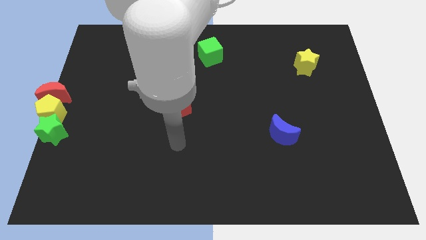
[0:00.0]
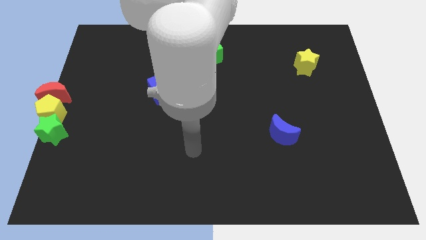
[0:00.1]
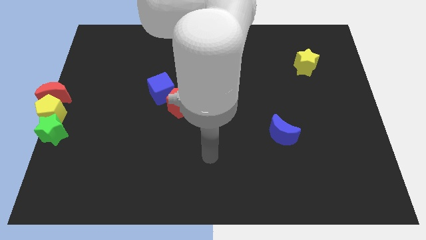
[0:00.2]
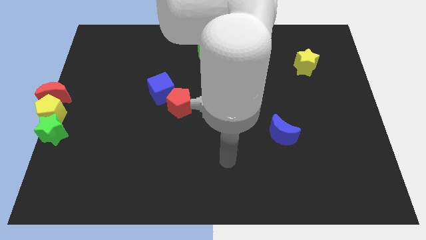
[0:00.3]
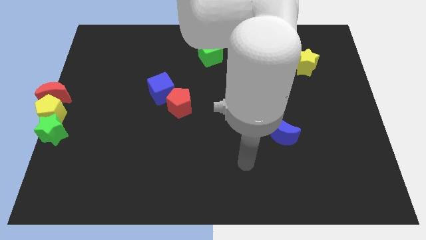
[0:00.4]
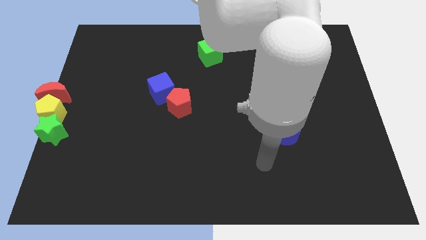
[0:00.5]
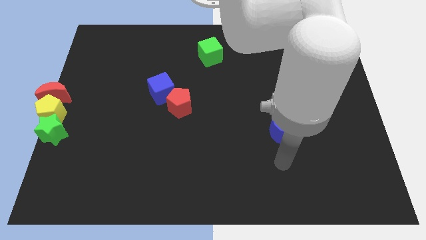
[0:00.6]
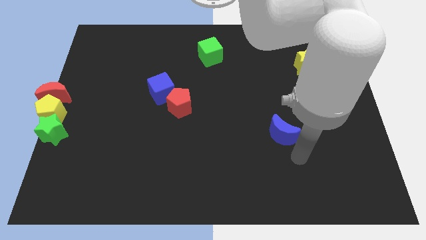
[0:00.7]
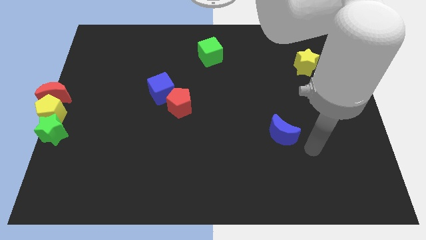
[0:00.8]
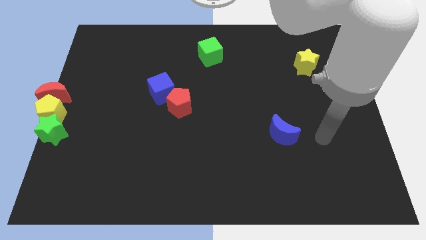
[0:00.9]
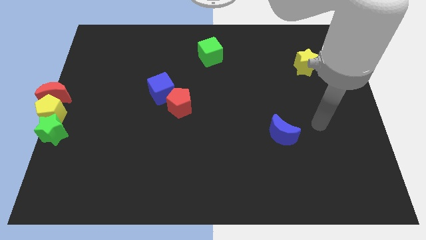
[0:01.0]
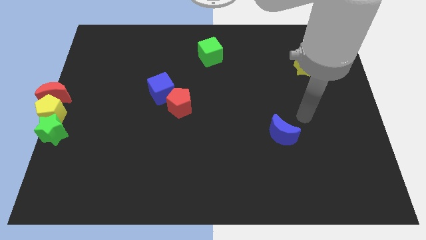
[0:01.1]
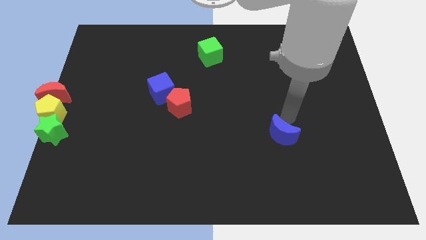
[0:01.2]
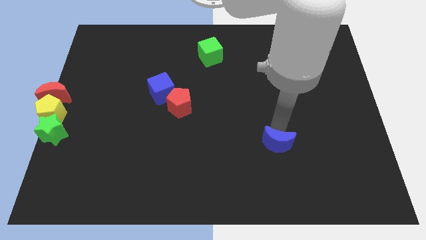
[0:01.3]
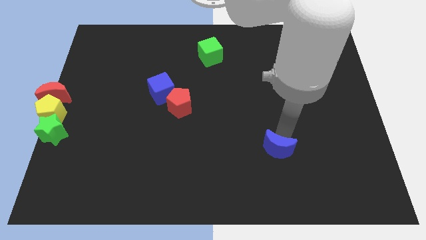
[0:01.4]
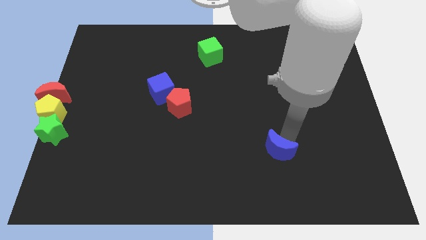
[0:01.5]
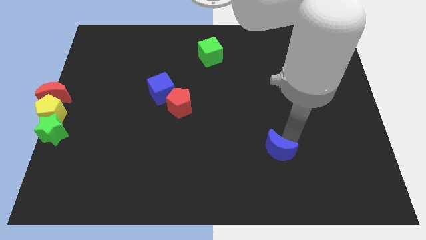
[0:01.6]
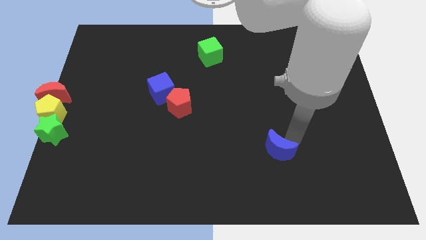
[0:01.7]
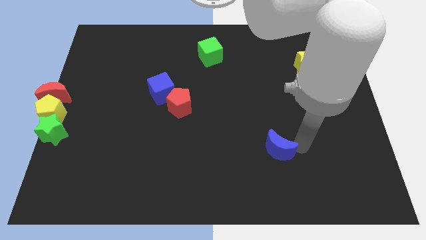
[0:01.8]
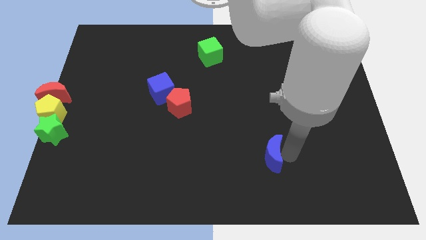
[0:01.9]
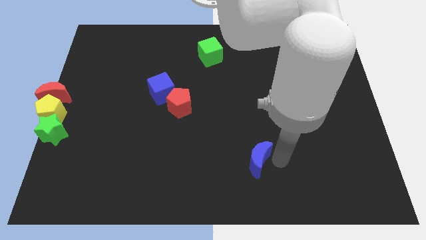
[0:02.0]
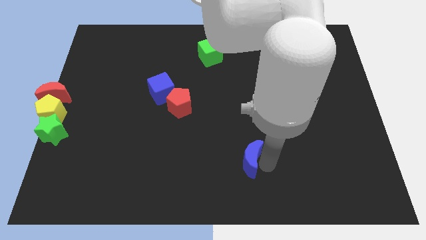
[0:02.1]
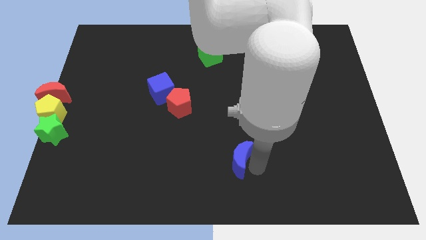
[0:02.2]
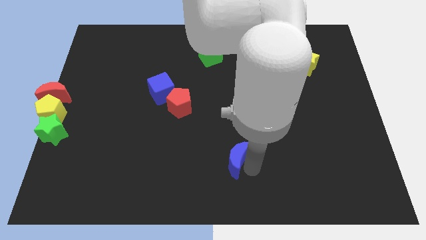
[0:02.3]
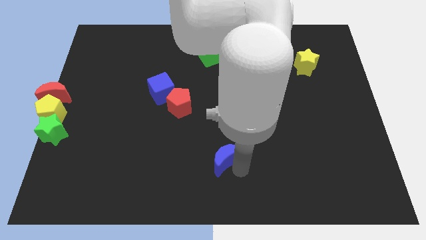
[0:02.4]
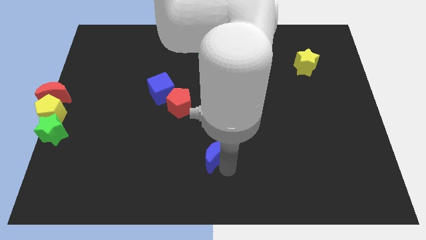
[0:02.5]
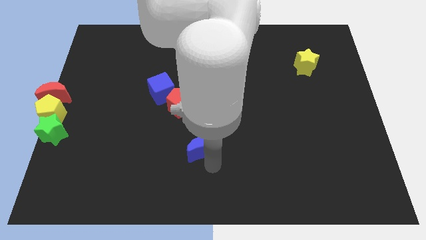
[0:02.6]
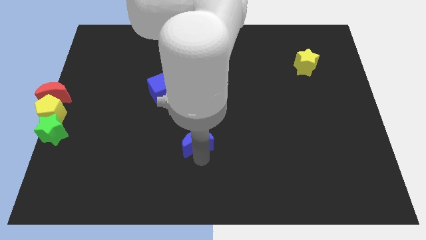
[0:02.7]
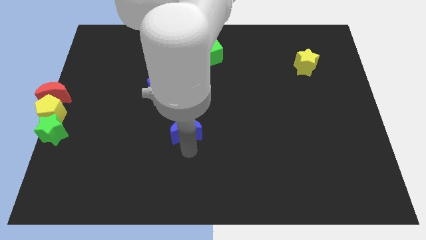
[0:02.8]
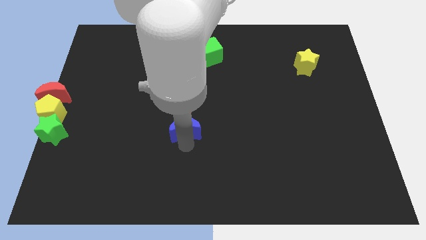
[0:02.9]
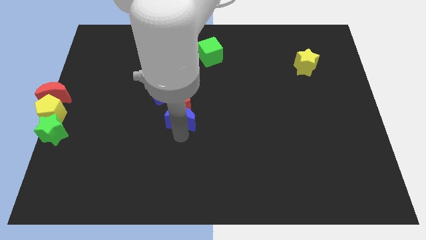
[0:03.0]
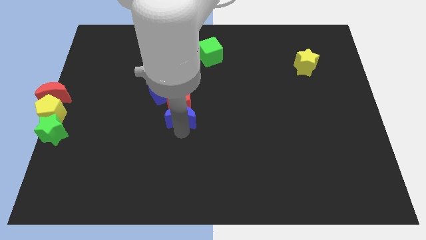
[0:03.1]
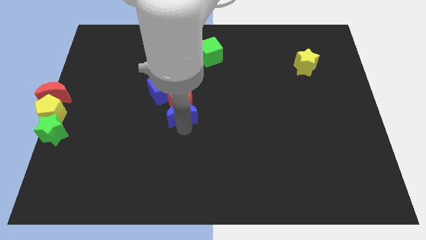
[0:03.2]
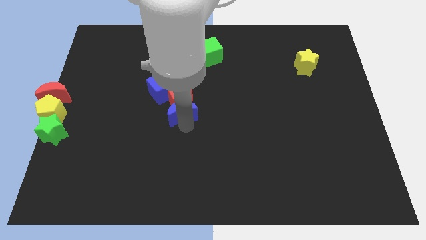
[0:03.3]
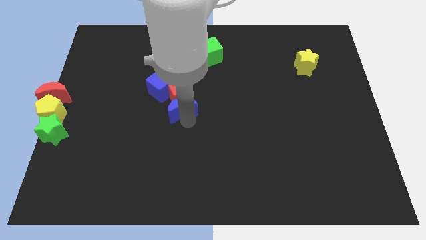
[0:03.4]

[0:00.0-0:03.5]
move the blue moon into the red pentagon

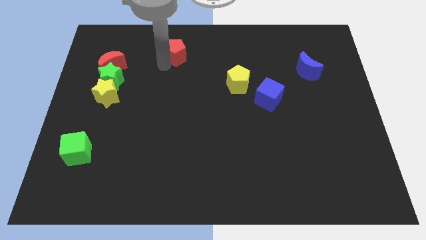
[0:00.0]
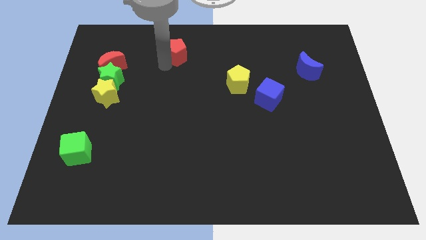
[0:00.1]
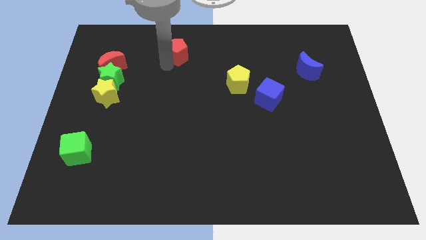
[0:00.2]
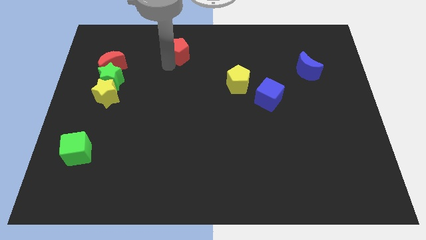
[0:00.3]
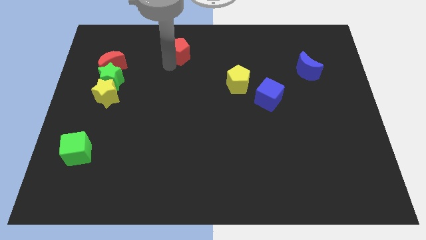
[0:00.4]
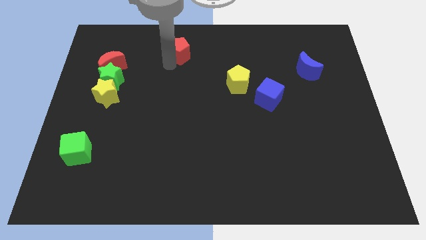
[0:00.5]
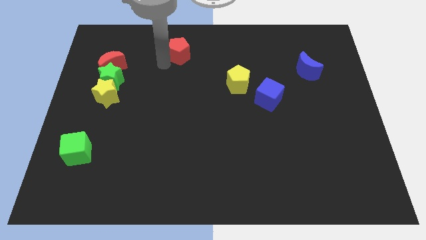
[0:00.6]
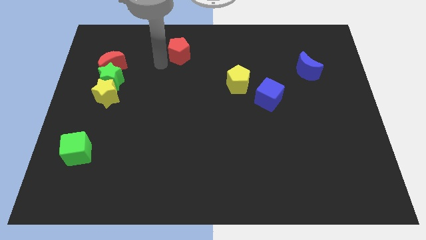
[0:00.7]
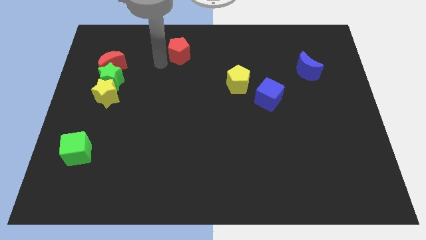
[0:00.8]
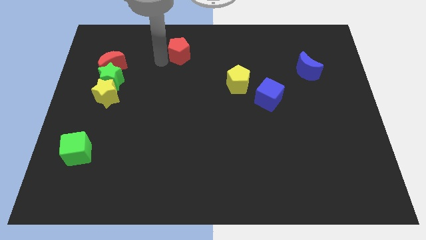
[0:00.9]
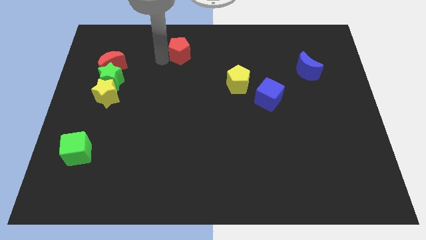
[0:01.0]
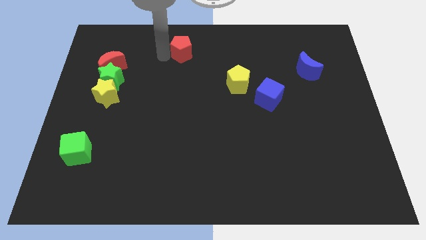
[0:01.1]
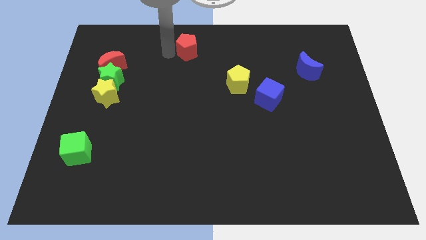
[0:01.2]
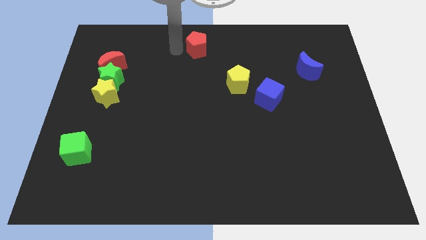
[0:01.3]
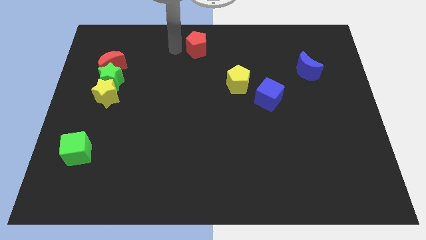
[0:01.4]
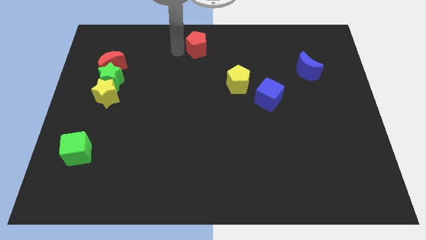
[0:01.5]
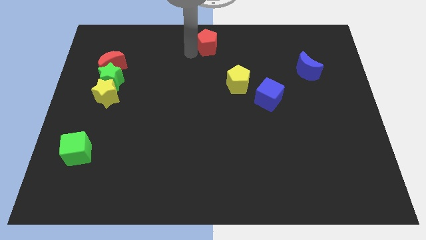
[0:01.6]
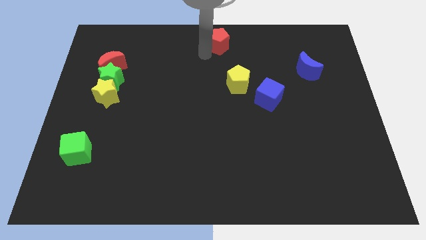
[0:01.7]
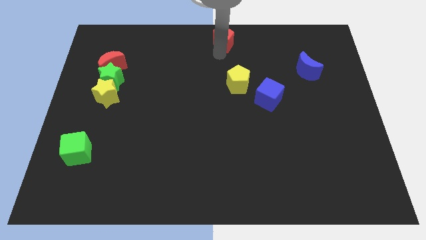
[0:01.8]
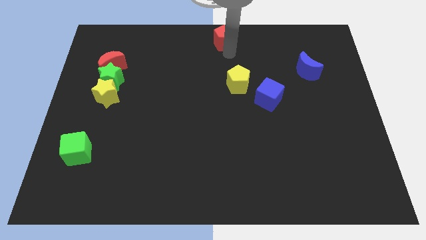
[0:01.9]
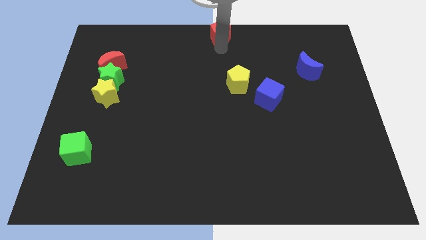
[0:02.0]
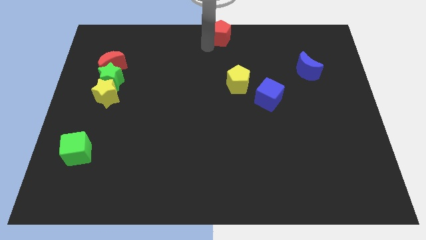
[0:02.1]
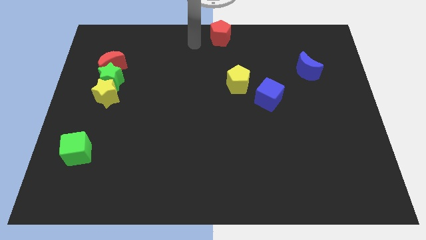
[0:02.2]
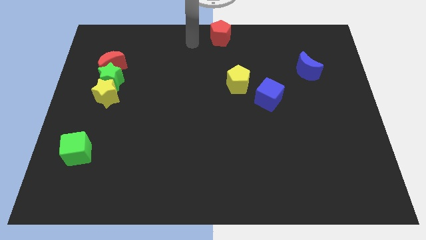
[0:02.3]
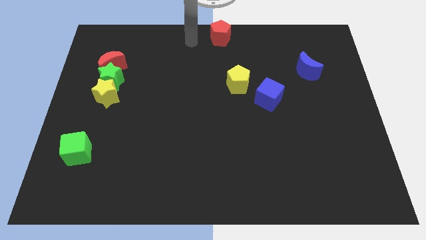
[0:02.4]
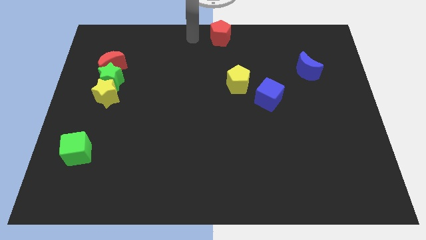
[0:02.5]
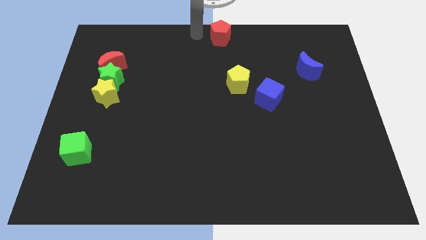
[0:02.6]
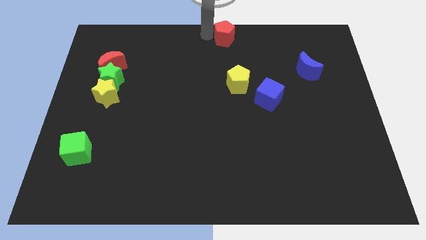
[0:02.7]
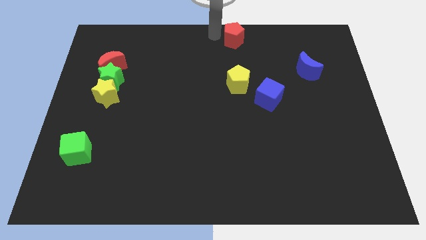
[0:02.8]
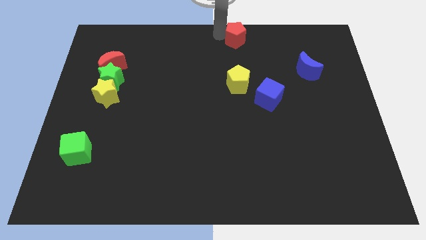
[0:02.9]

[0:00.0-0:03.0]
place red pentagon above yellow pentagon

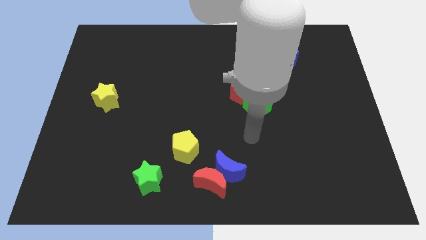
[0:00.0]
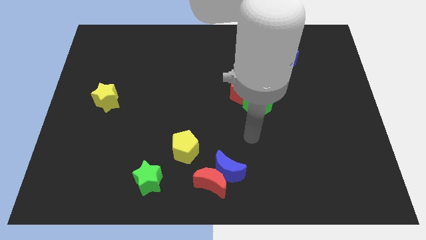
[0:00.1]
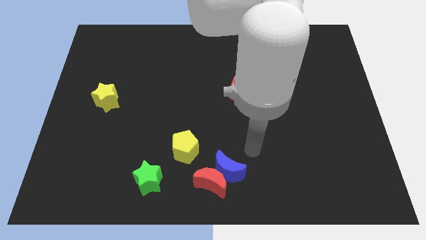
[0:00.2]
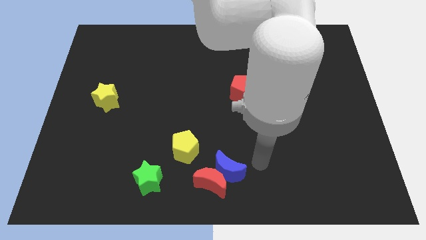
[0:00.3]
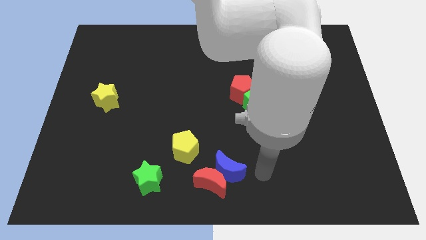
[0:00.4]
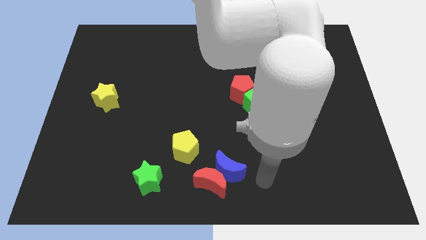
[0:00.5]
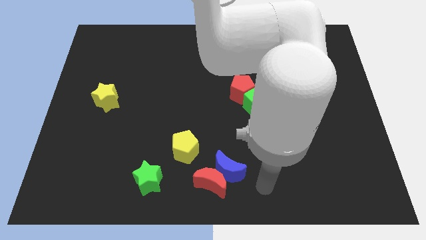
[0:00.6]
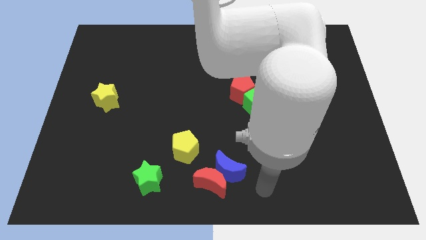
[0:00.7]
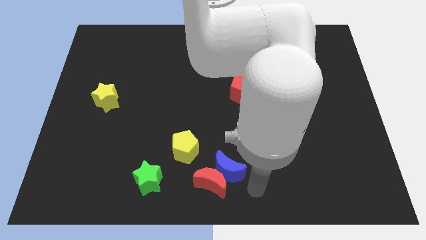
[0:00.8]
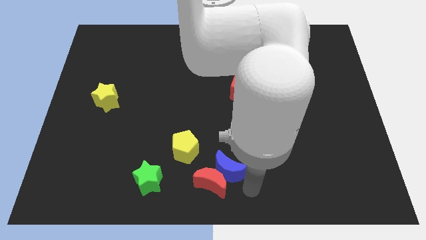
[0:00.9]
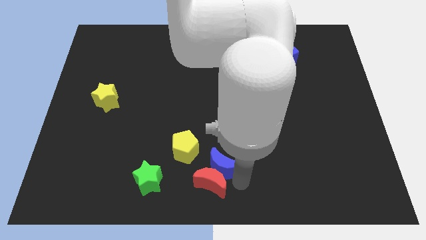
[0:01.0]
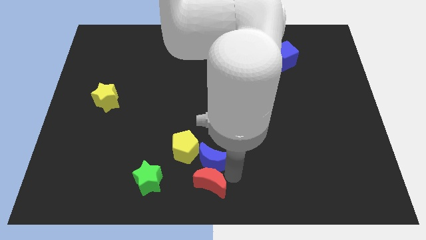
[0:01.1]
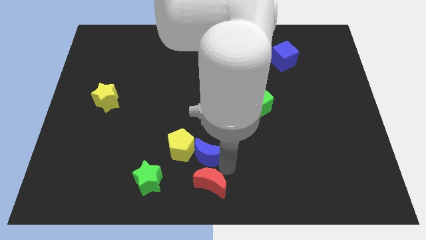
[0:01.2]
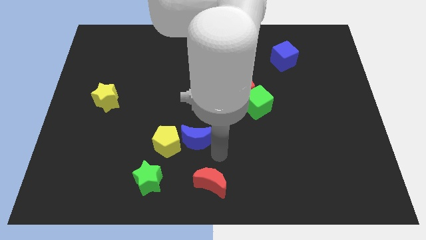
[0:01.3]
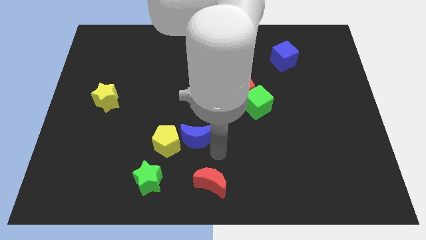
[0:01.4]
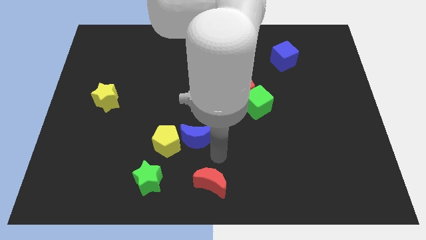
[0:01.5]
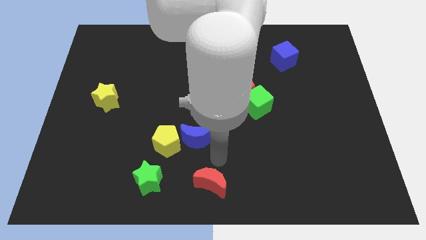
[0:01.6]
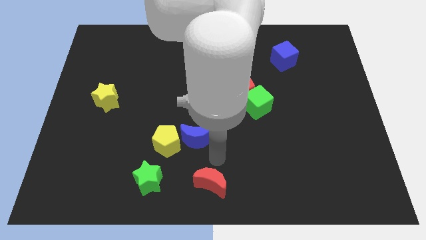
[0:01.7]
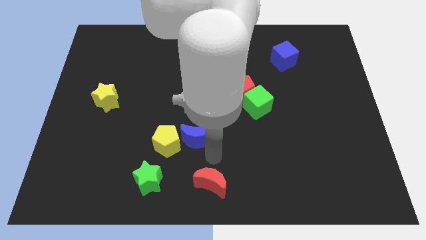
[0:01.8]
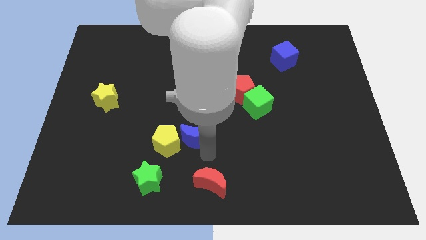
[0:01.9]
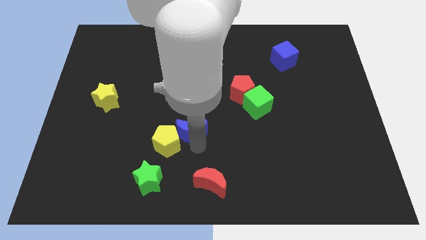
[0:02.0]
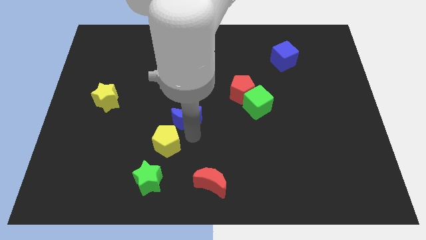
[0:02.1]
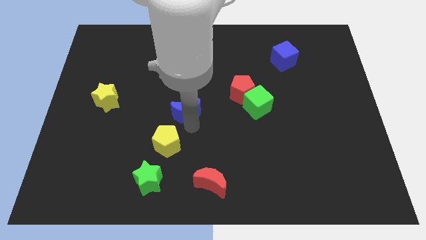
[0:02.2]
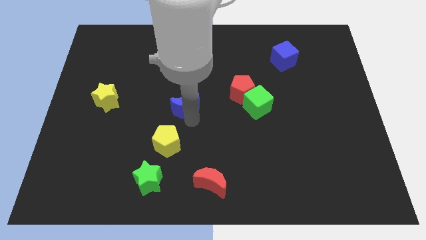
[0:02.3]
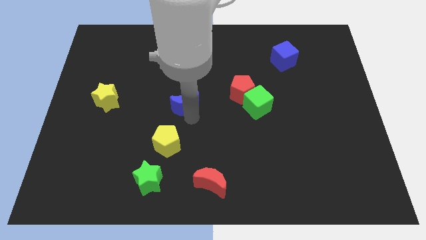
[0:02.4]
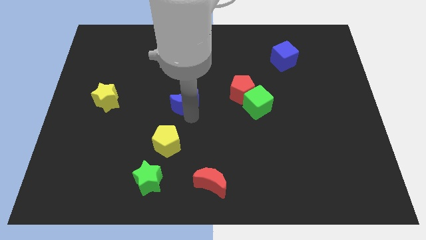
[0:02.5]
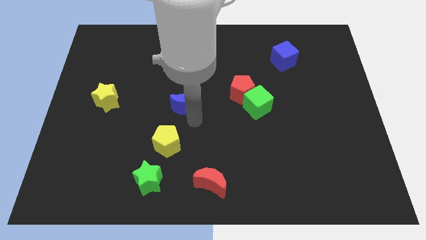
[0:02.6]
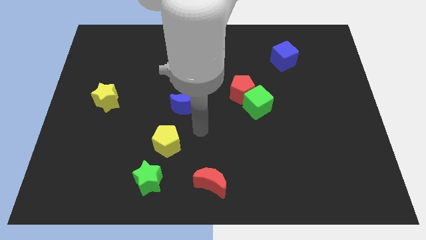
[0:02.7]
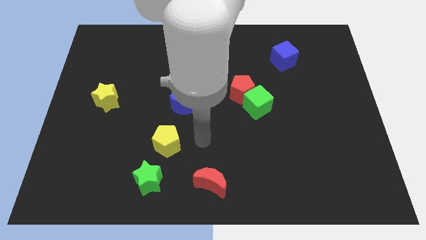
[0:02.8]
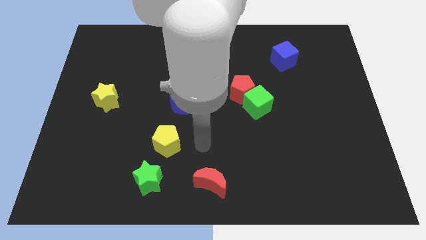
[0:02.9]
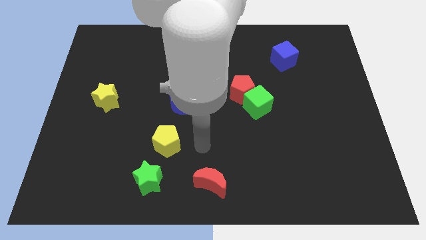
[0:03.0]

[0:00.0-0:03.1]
move the blue crescent away from the top right side of the red moon
